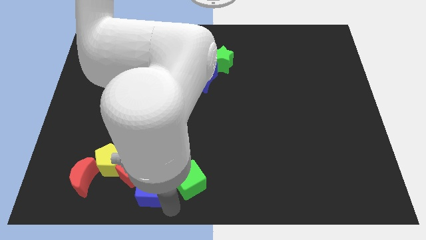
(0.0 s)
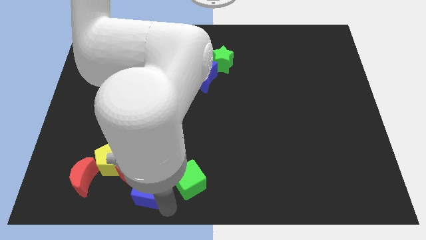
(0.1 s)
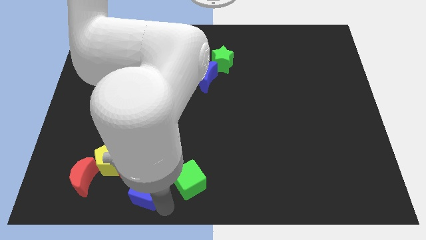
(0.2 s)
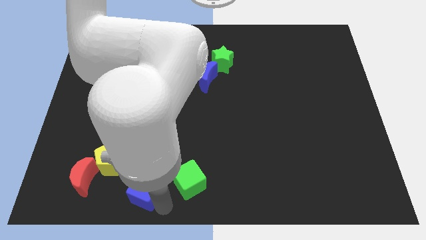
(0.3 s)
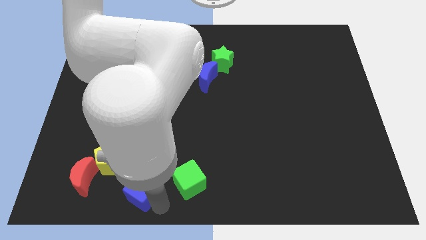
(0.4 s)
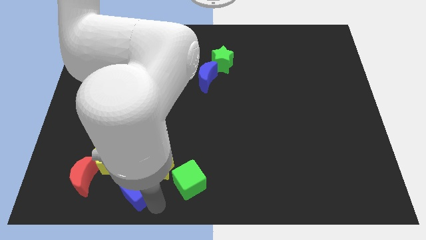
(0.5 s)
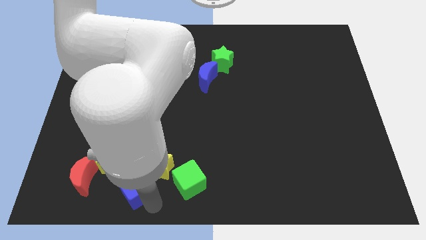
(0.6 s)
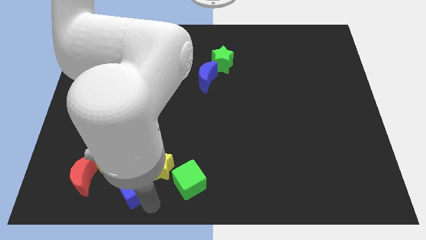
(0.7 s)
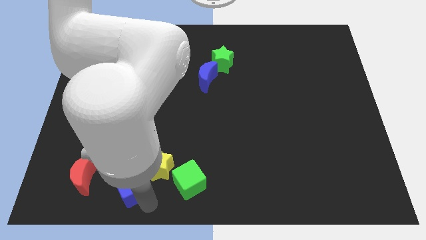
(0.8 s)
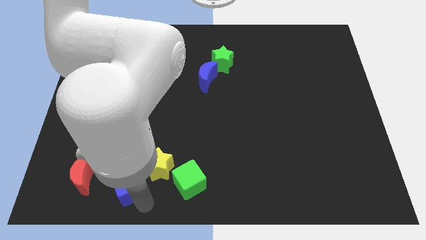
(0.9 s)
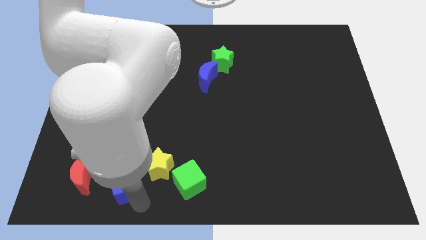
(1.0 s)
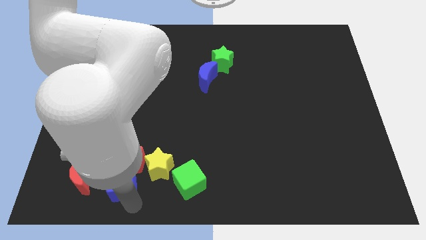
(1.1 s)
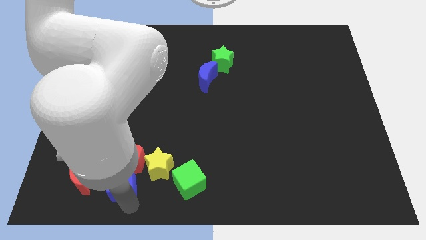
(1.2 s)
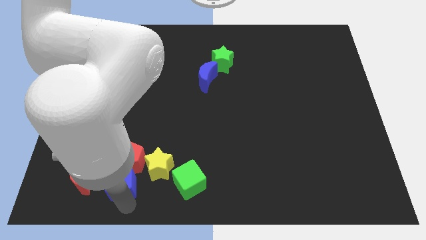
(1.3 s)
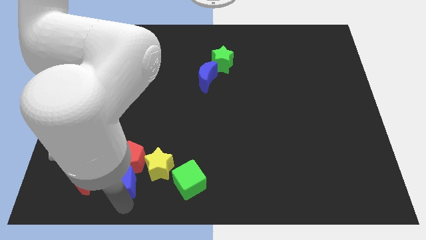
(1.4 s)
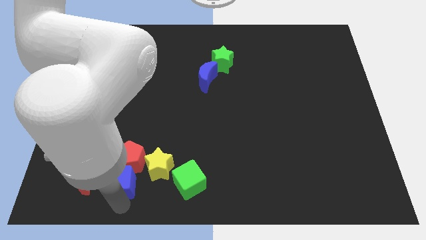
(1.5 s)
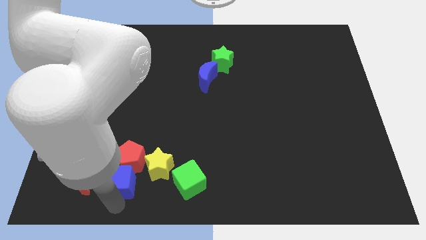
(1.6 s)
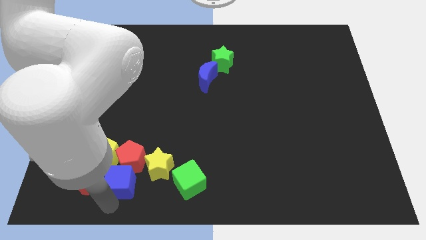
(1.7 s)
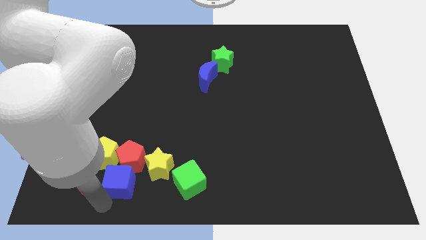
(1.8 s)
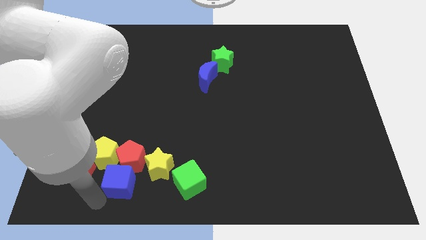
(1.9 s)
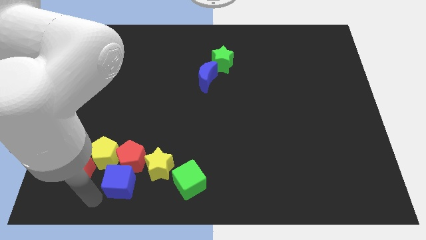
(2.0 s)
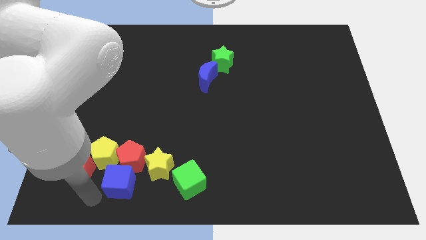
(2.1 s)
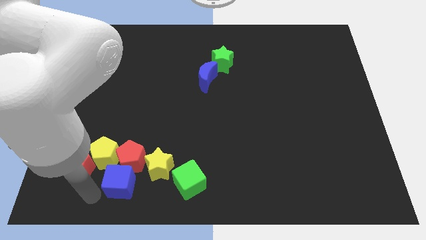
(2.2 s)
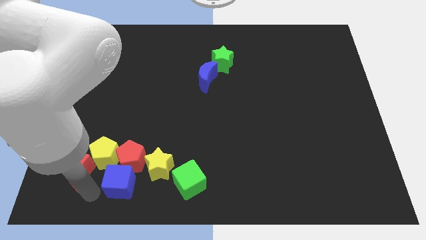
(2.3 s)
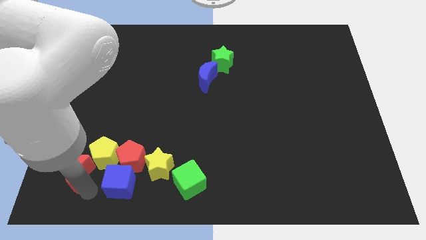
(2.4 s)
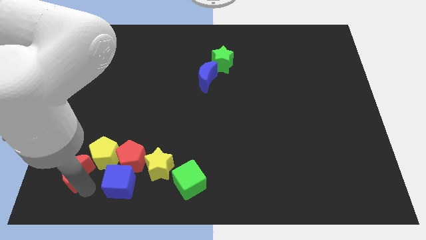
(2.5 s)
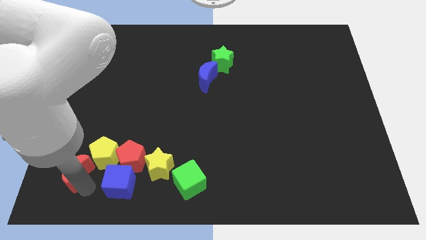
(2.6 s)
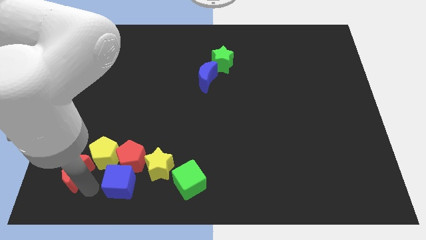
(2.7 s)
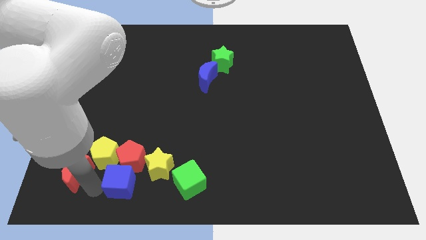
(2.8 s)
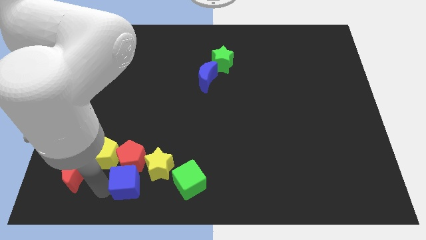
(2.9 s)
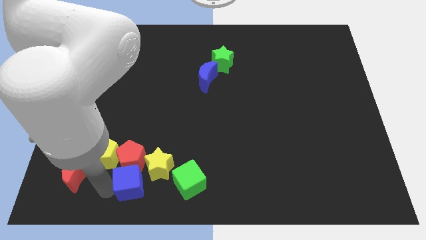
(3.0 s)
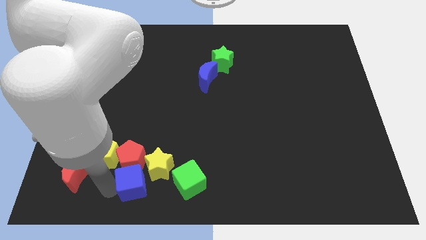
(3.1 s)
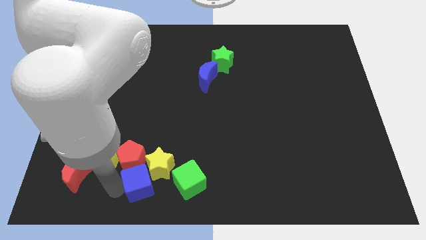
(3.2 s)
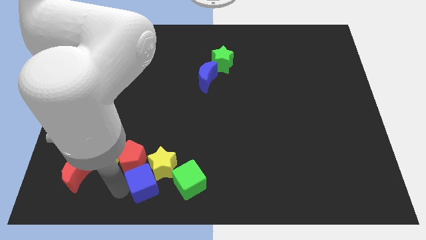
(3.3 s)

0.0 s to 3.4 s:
move the blue cube to the bottom of the red pentagon

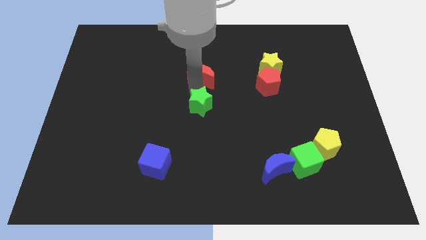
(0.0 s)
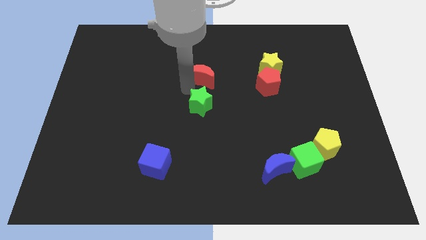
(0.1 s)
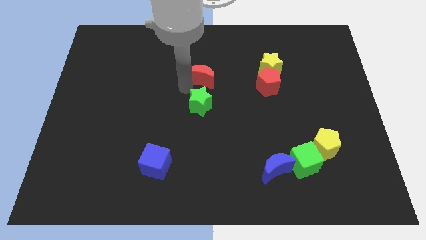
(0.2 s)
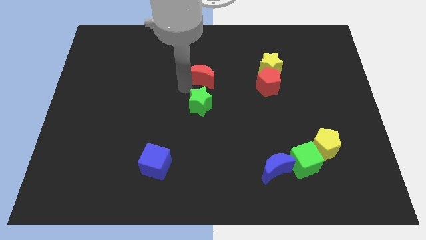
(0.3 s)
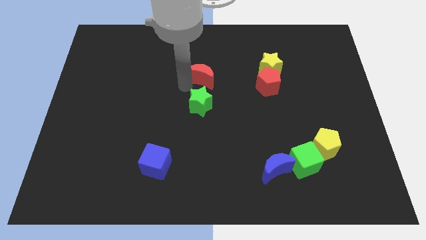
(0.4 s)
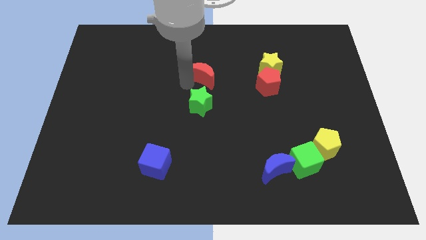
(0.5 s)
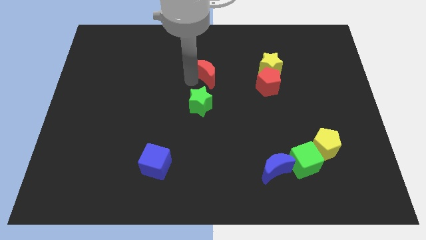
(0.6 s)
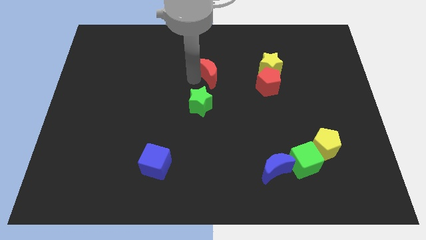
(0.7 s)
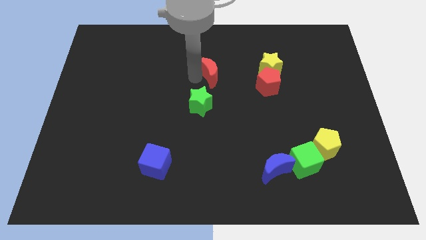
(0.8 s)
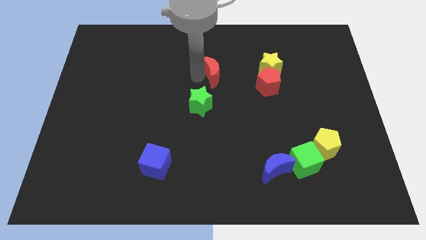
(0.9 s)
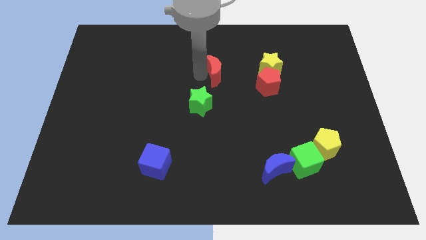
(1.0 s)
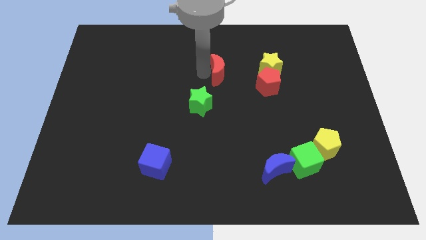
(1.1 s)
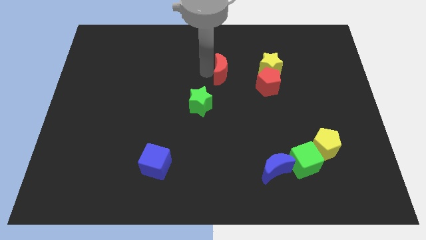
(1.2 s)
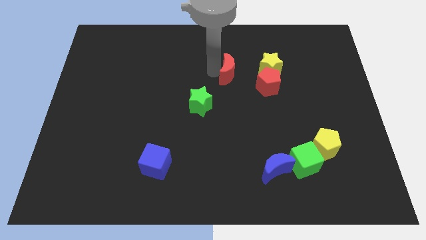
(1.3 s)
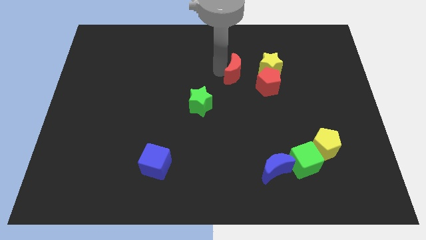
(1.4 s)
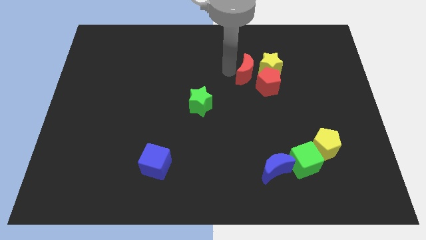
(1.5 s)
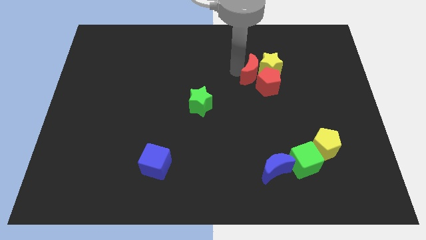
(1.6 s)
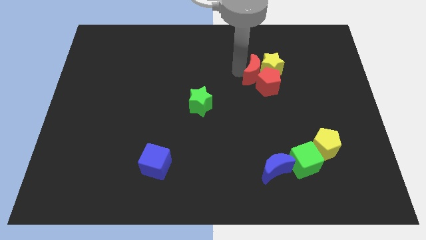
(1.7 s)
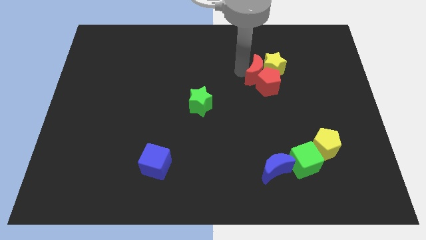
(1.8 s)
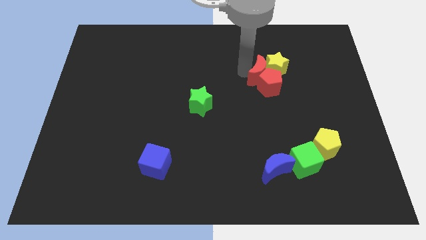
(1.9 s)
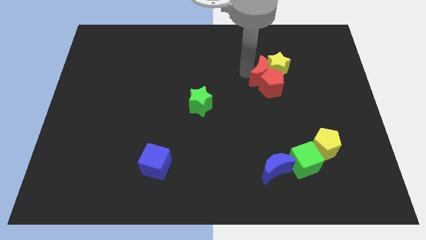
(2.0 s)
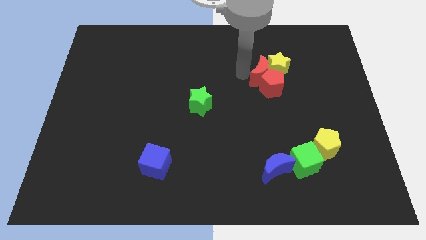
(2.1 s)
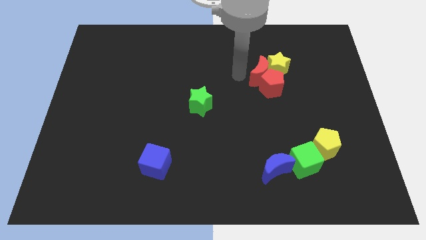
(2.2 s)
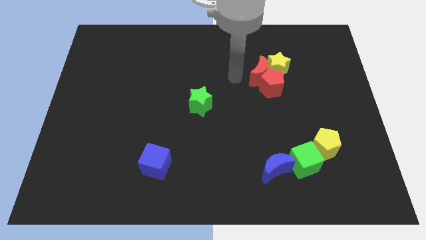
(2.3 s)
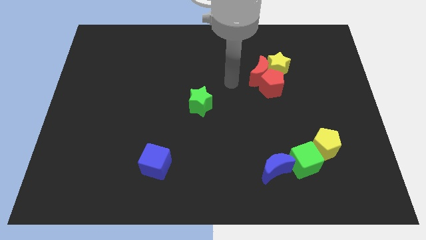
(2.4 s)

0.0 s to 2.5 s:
push the red crescent to the left of the red pentagon

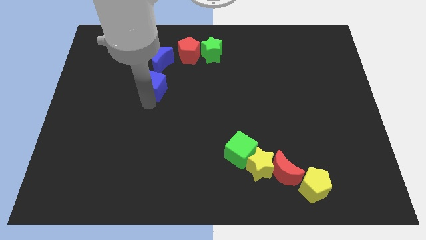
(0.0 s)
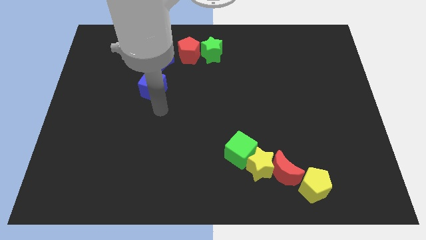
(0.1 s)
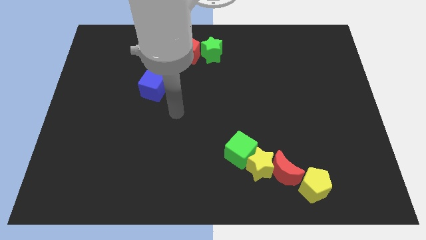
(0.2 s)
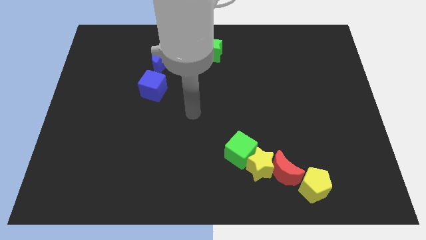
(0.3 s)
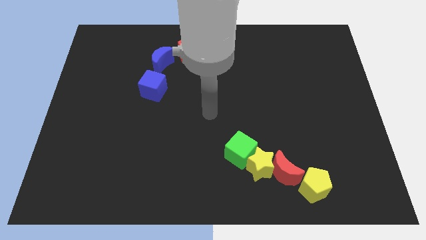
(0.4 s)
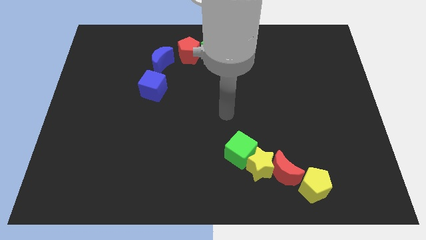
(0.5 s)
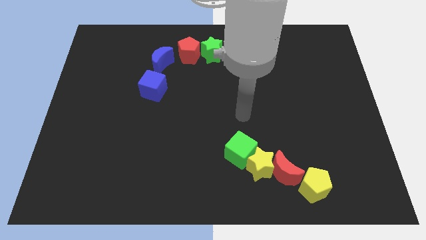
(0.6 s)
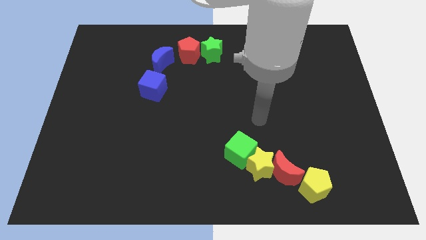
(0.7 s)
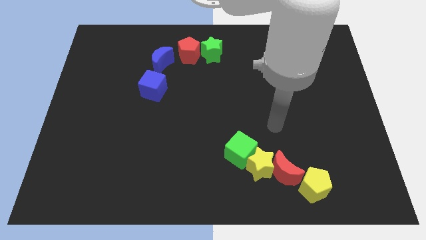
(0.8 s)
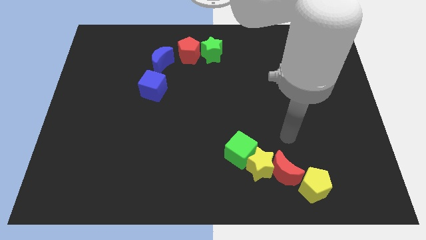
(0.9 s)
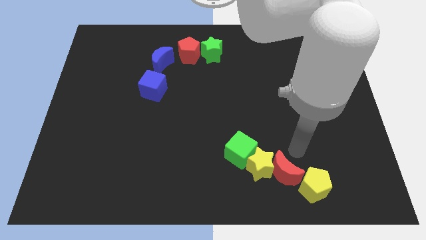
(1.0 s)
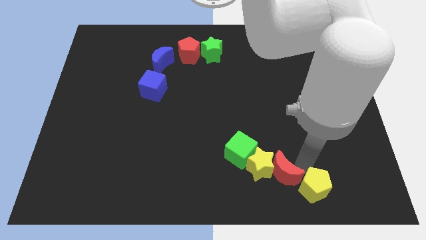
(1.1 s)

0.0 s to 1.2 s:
place your arm at the top of red moon

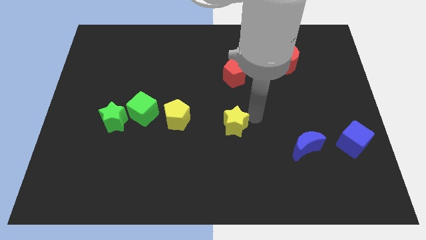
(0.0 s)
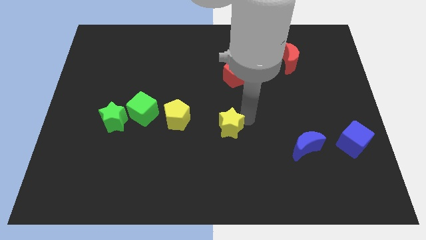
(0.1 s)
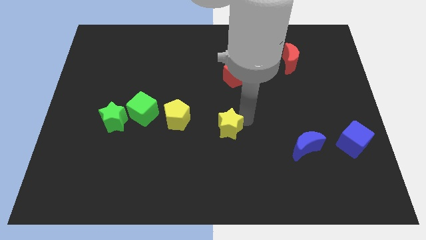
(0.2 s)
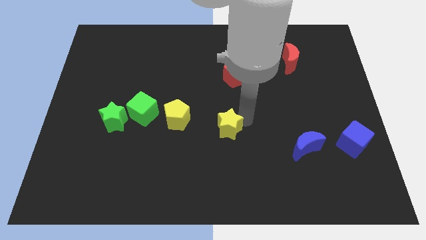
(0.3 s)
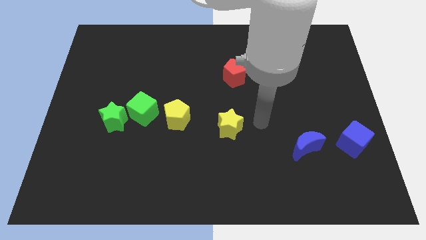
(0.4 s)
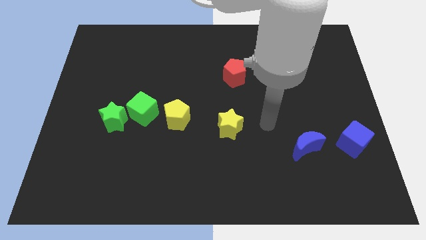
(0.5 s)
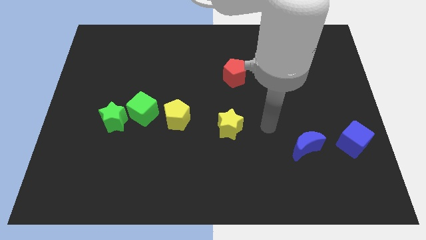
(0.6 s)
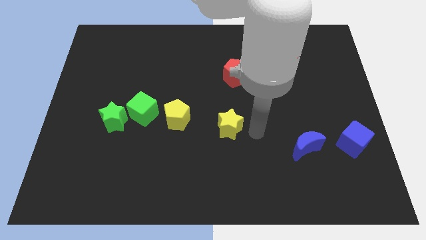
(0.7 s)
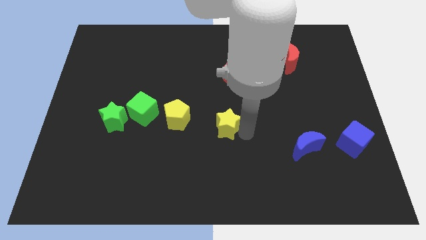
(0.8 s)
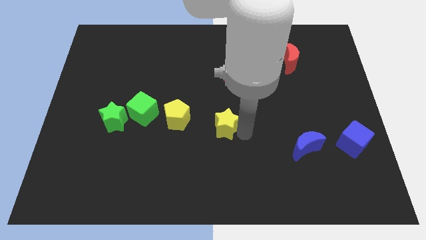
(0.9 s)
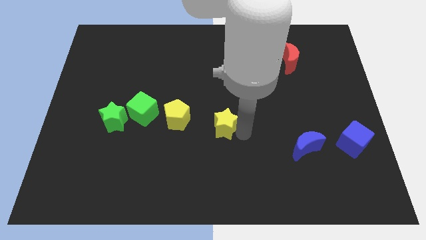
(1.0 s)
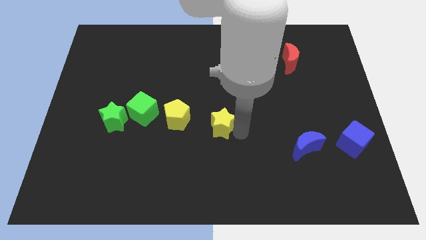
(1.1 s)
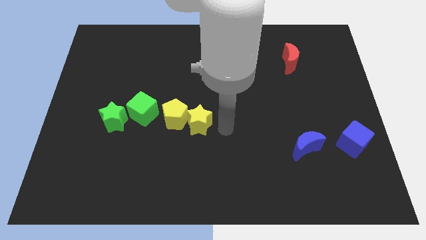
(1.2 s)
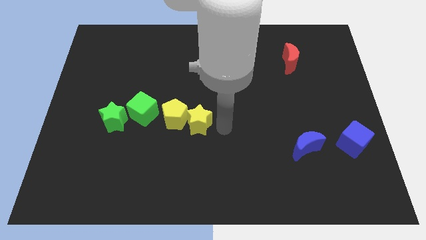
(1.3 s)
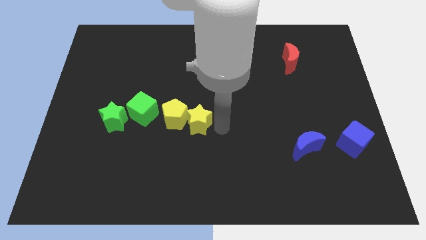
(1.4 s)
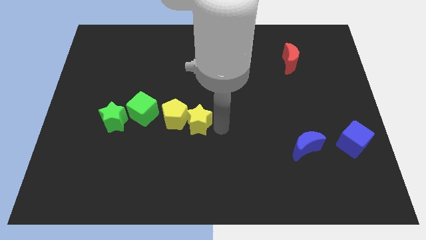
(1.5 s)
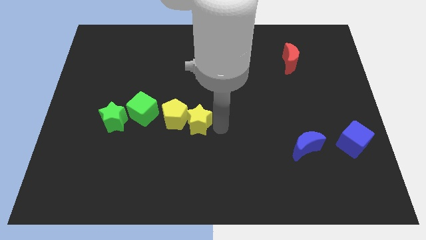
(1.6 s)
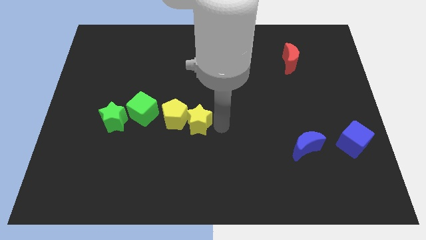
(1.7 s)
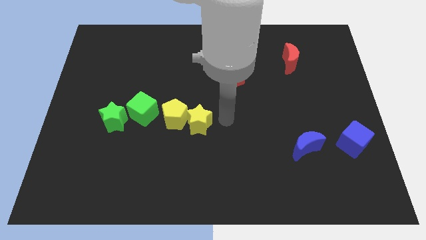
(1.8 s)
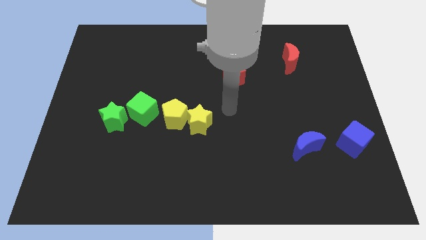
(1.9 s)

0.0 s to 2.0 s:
move yellow star into yellow pentagon
